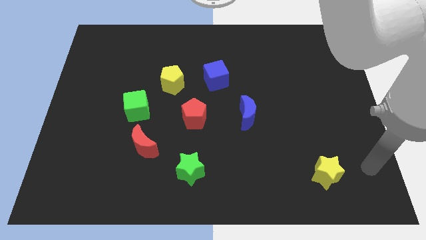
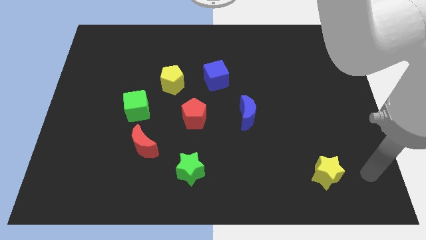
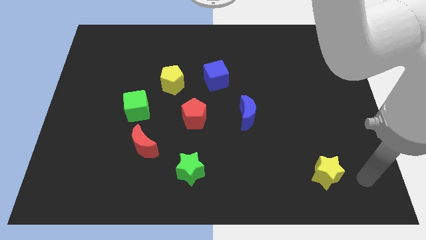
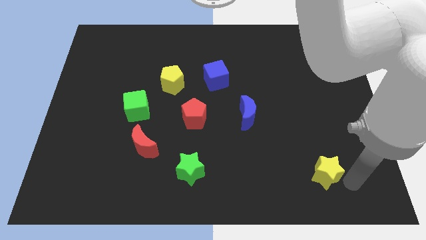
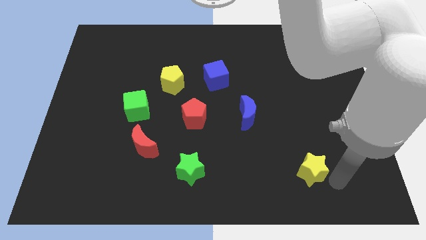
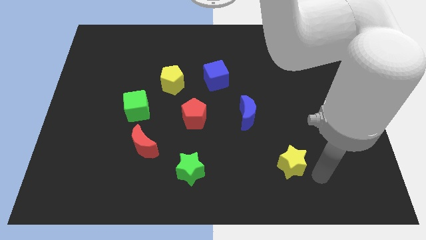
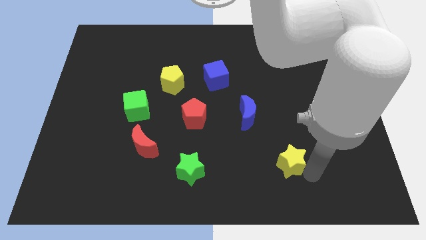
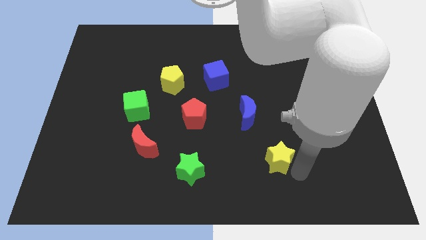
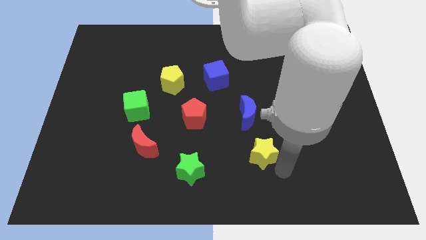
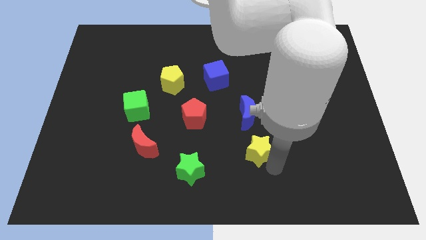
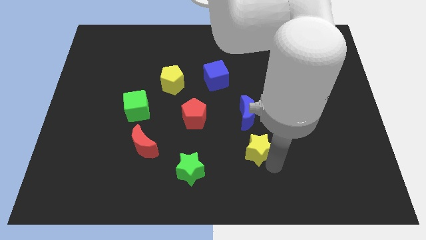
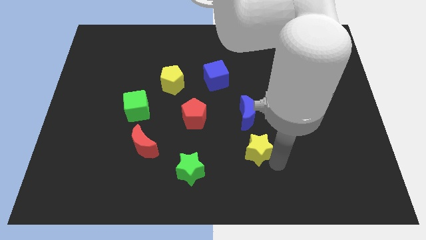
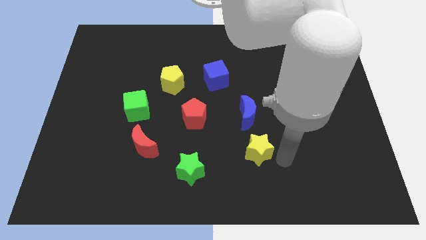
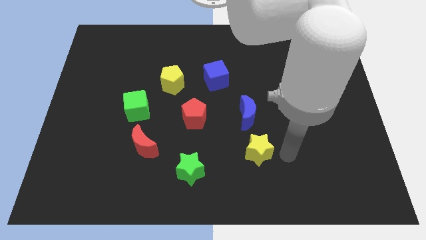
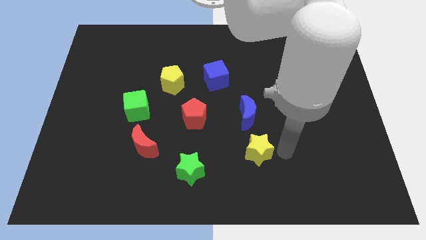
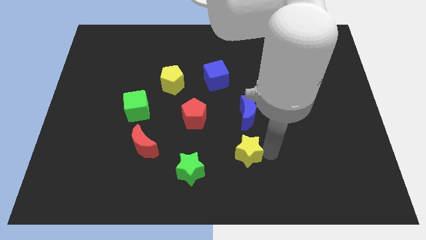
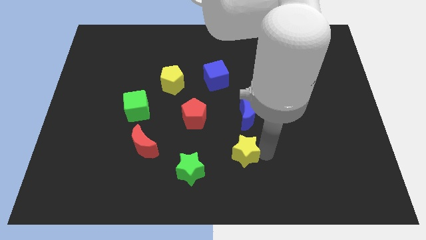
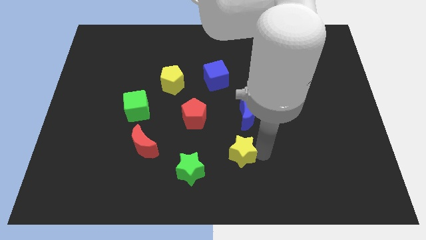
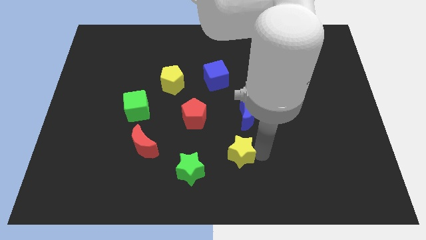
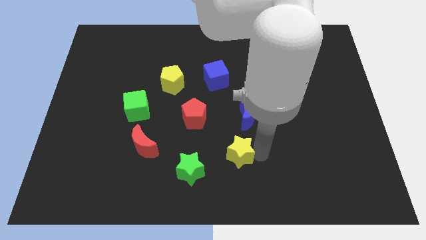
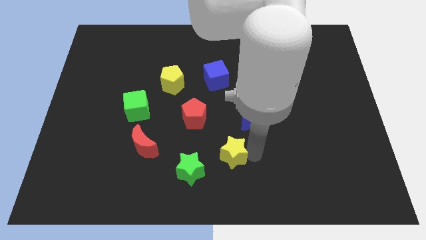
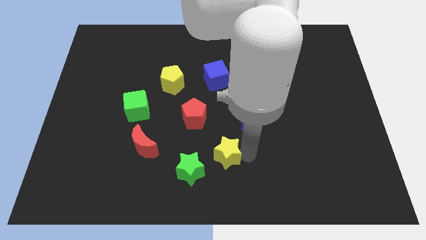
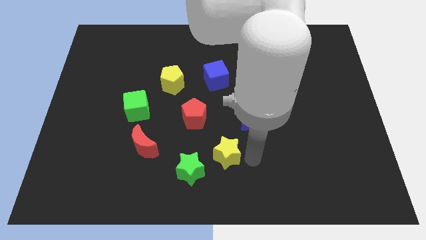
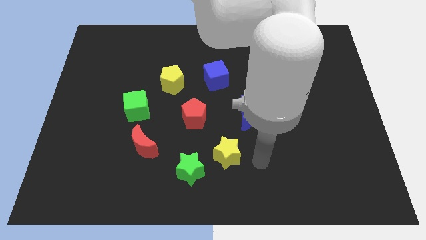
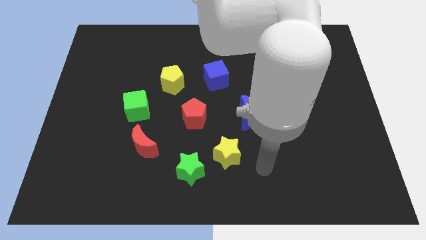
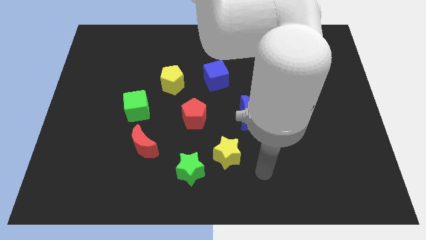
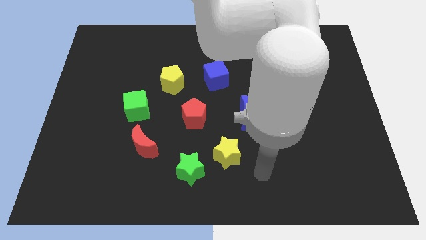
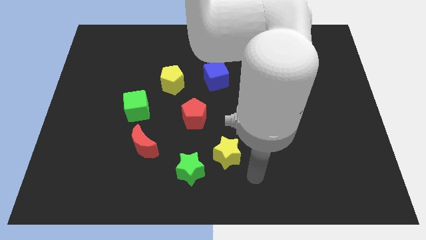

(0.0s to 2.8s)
move the yellow star in the circle of green star blue crescent

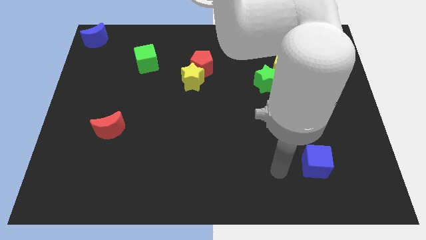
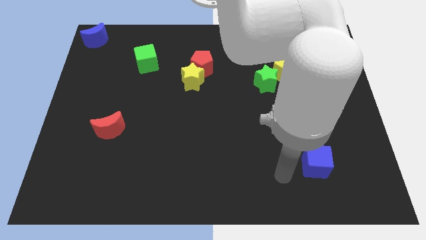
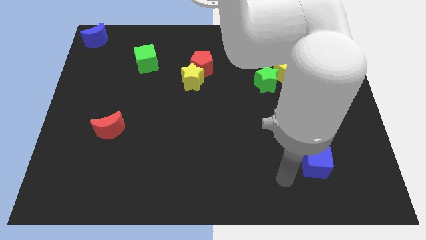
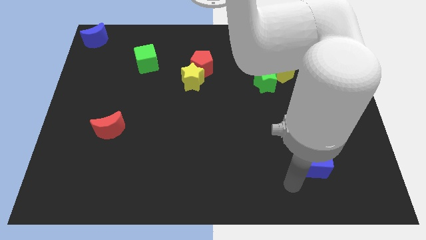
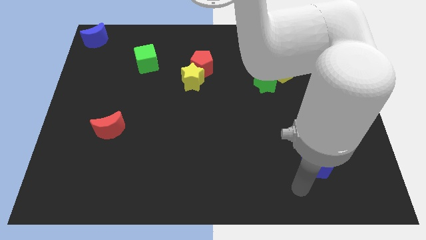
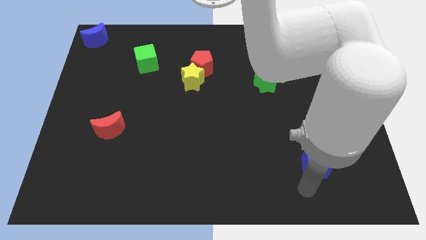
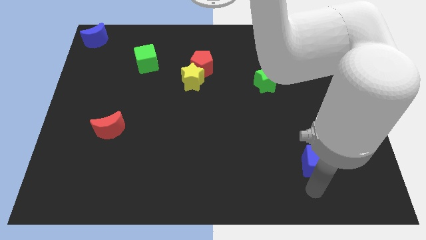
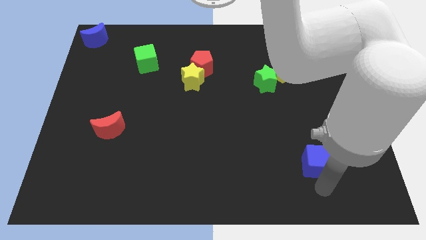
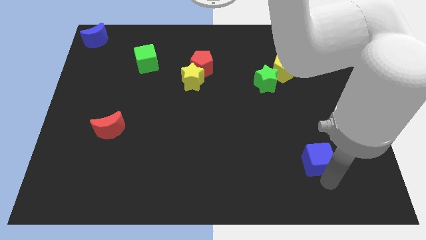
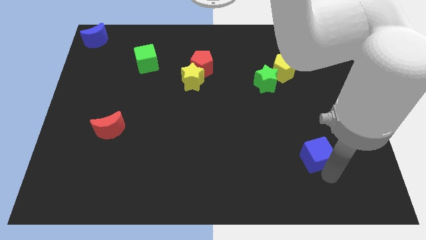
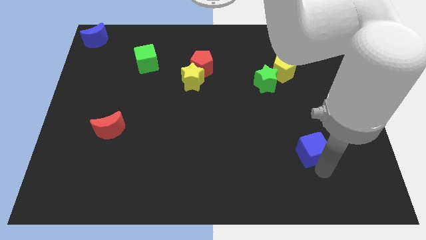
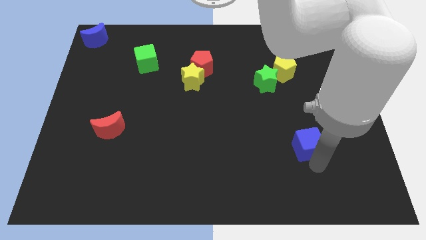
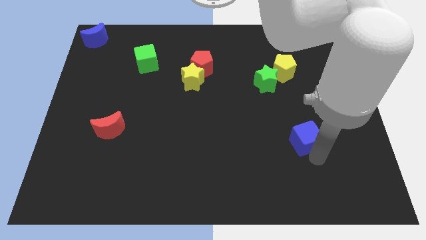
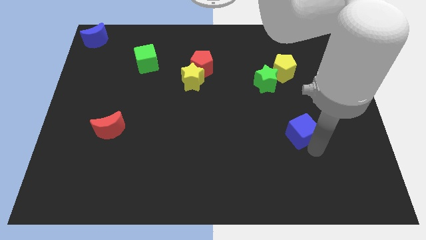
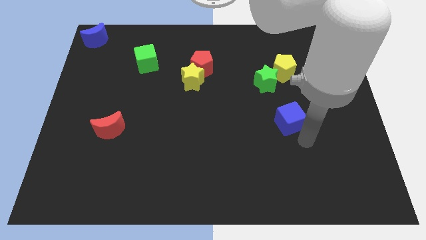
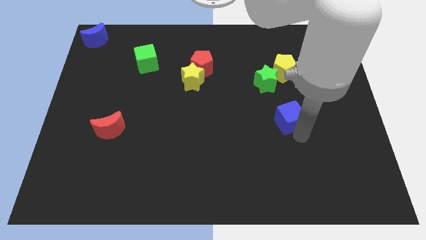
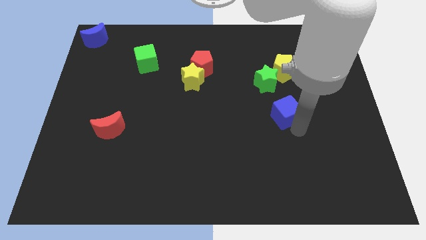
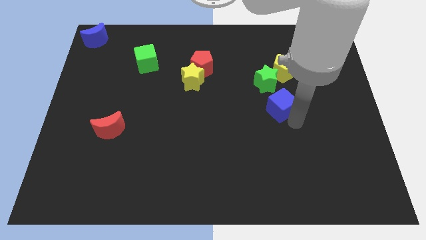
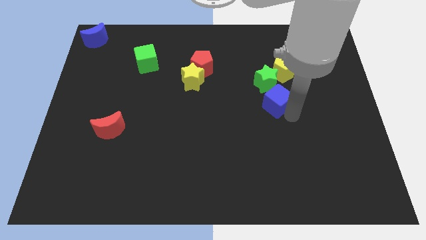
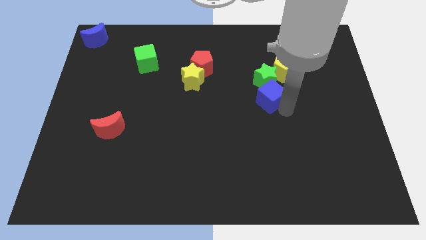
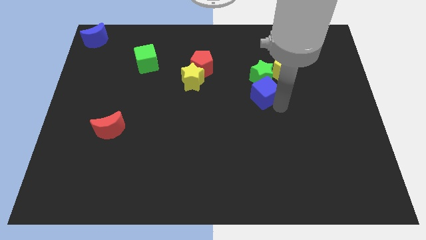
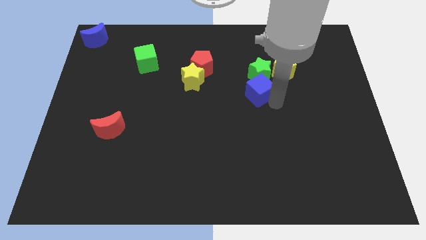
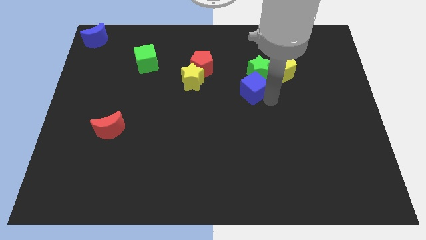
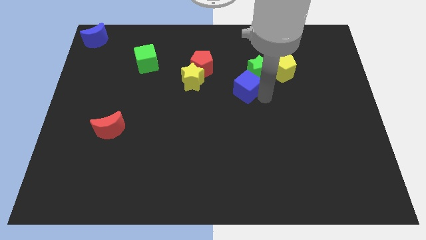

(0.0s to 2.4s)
push the blue cube into the green star

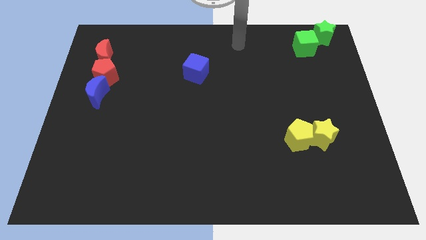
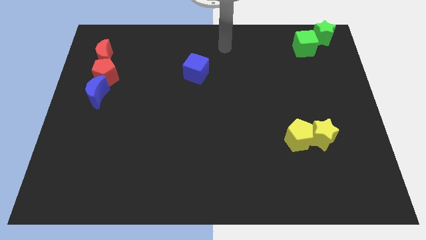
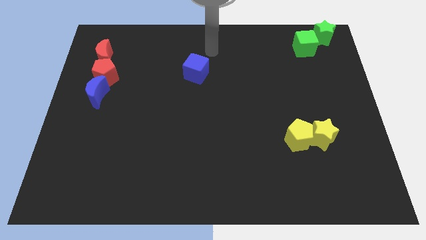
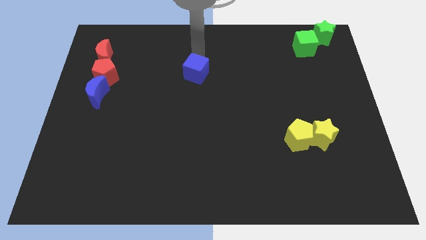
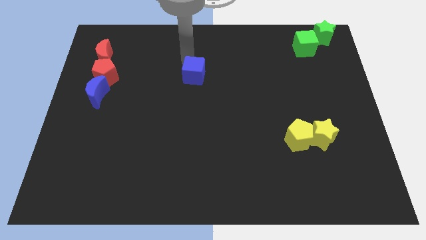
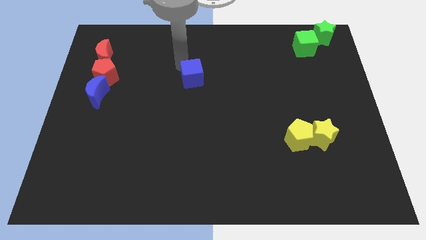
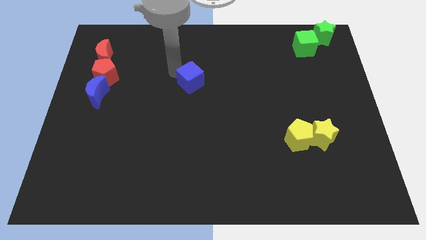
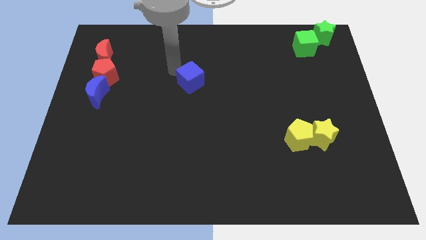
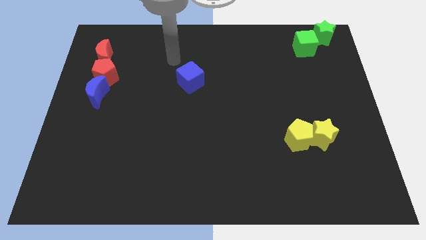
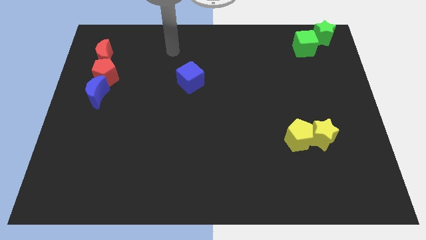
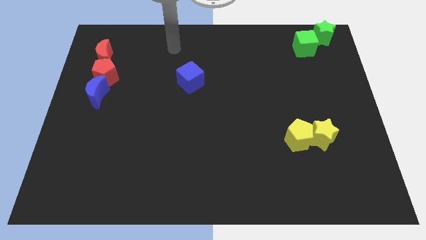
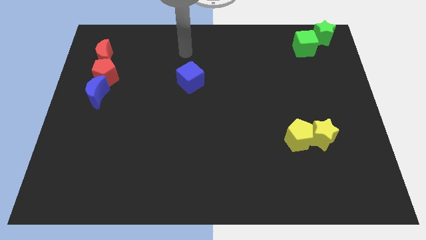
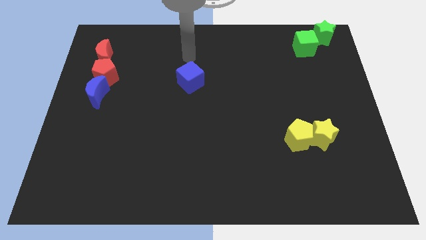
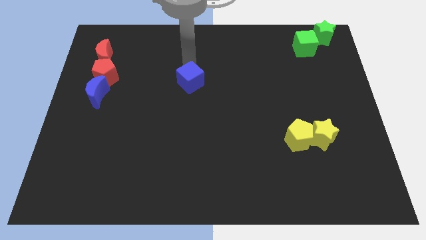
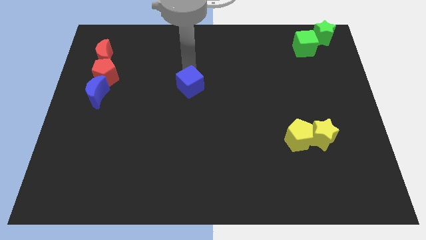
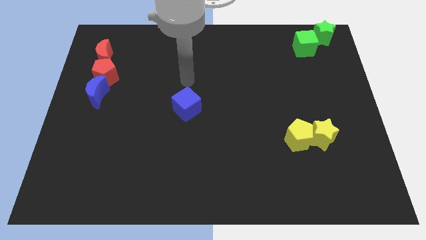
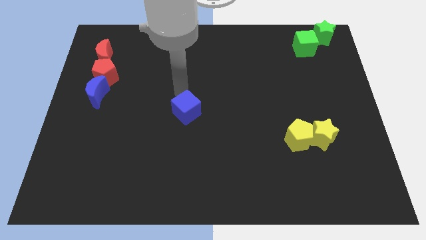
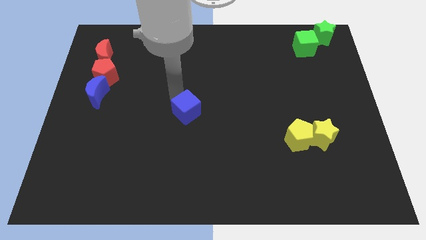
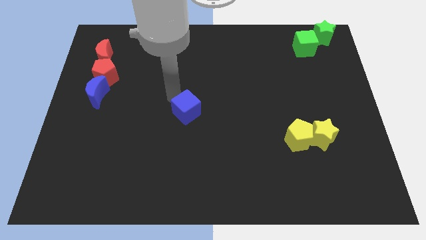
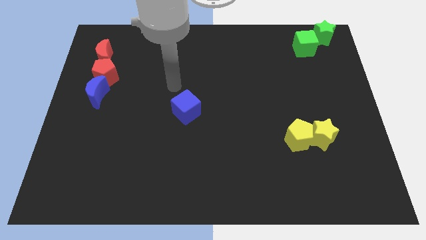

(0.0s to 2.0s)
place the blue cube parallel to the blue moon

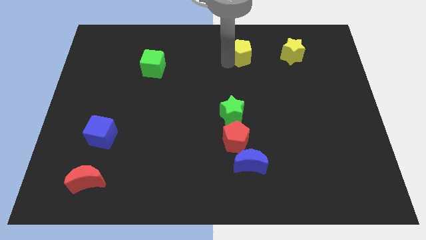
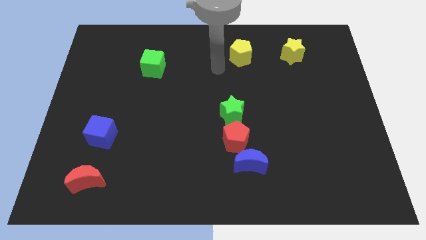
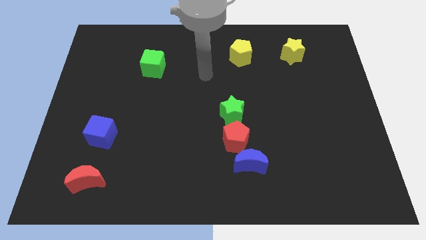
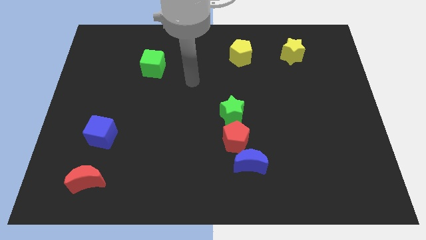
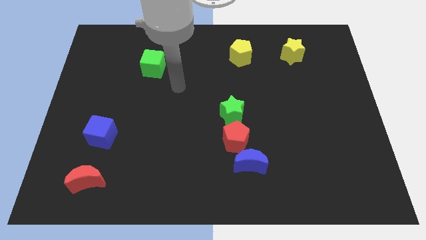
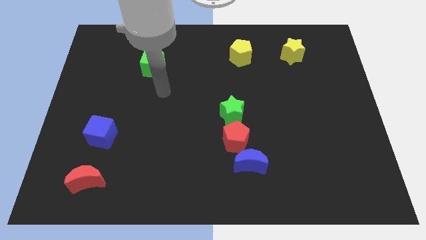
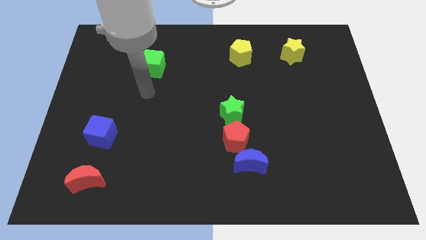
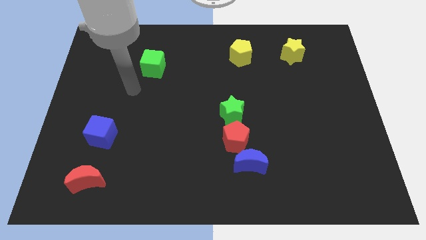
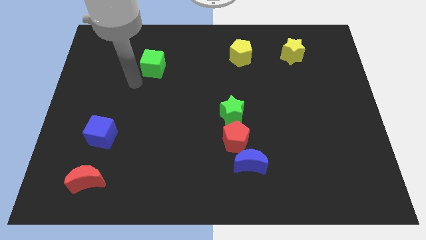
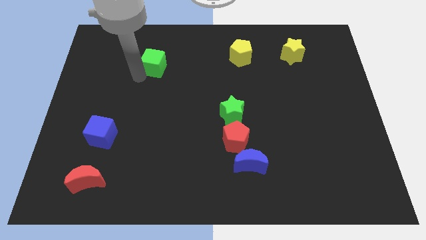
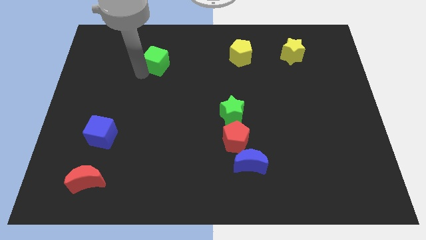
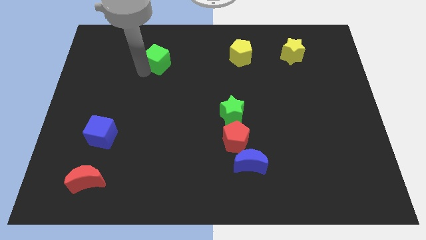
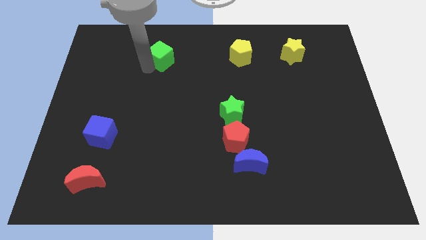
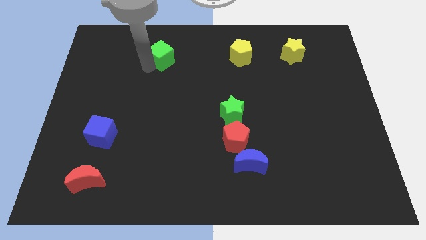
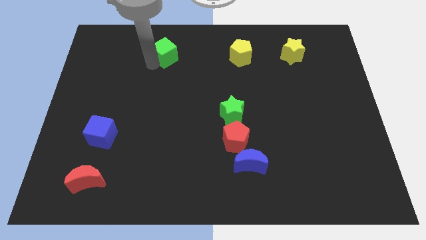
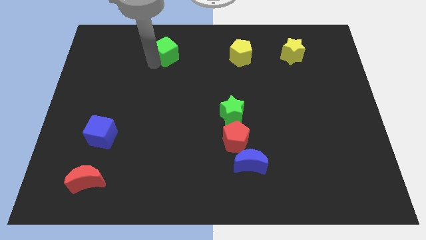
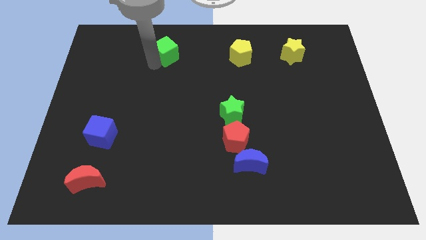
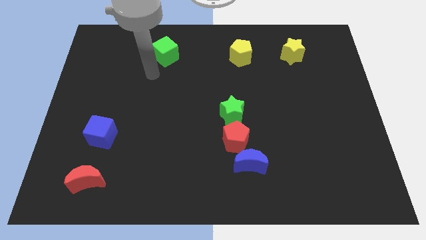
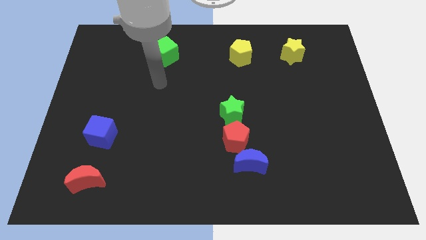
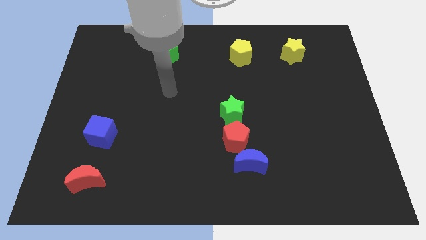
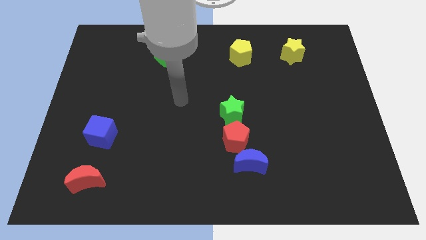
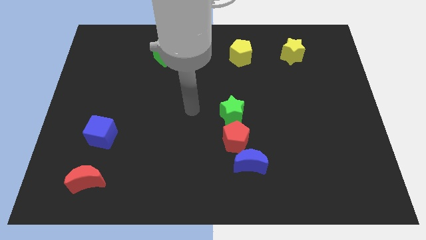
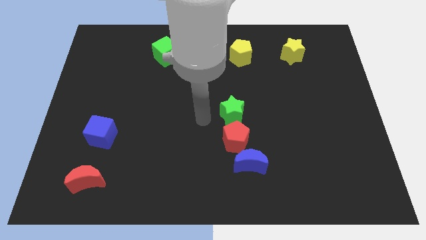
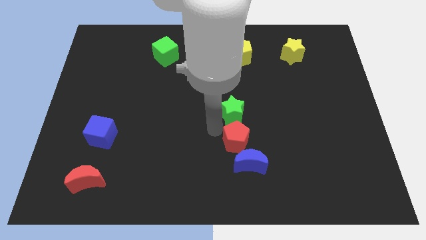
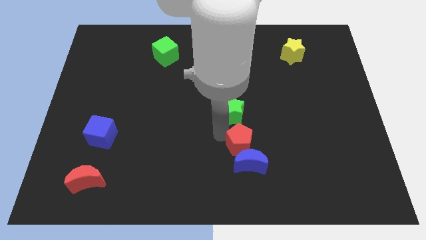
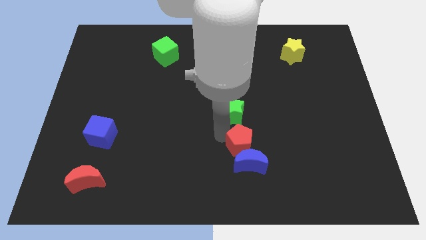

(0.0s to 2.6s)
push the green cube slightly towards the top
